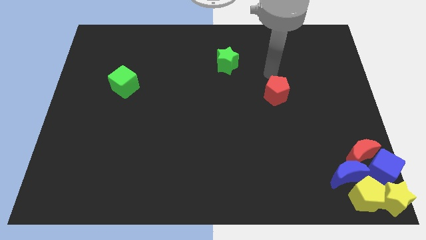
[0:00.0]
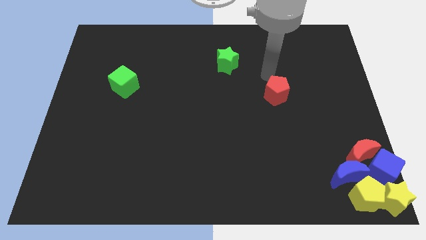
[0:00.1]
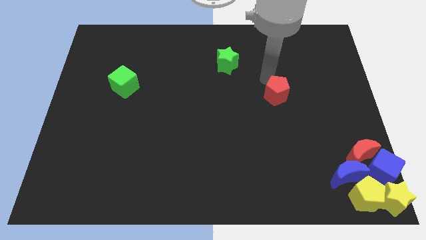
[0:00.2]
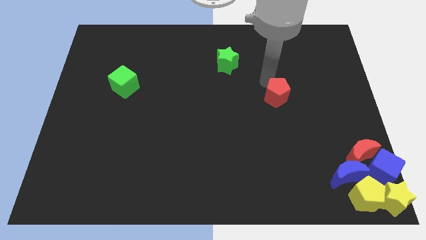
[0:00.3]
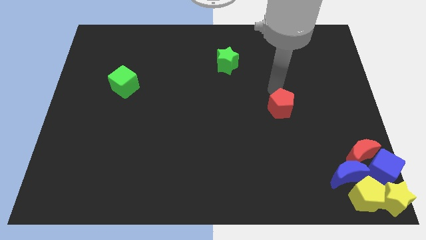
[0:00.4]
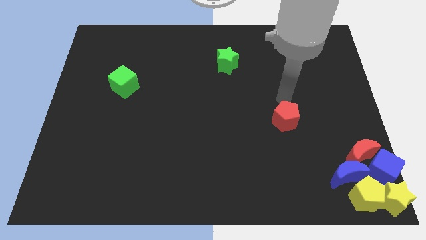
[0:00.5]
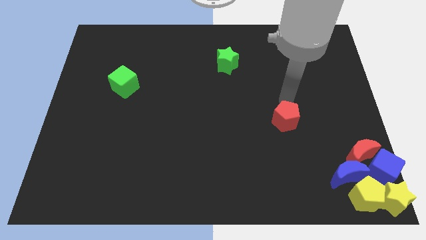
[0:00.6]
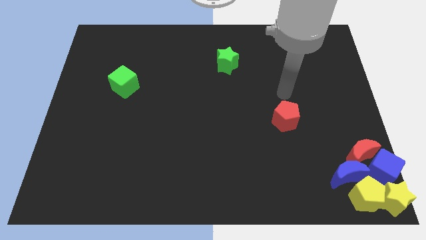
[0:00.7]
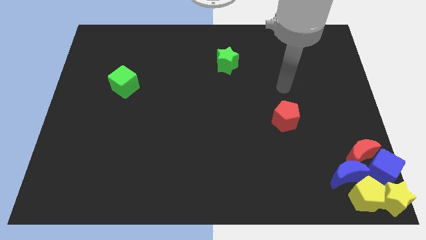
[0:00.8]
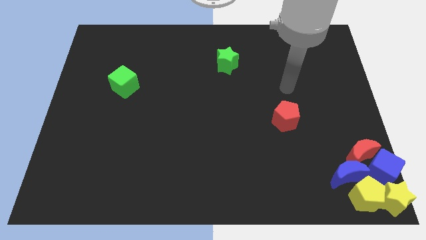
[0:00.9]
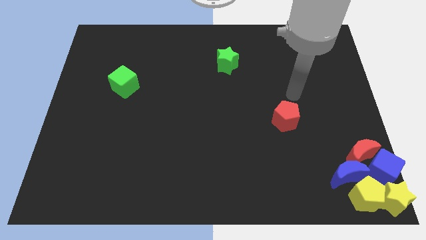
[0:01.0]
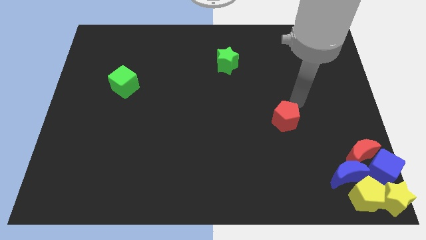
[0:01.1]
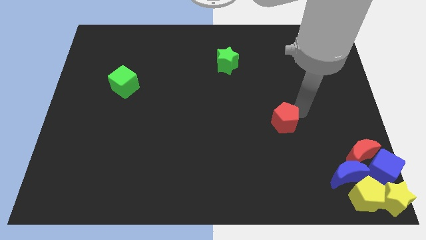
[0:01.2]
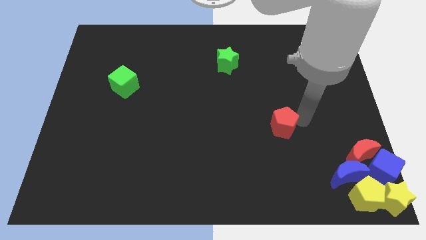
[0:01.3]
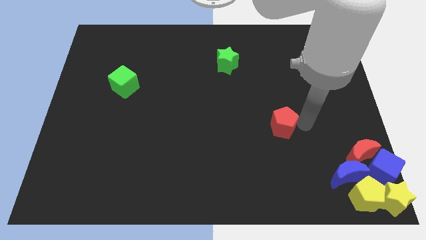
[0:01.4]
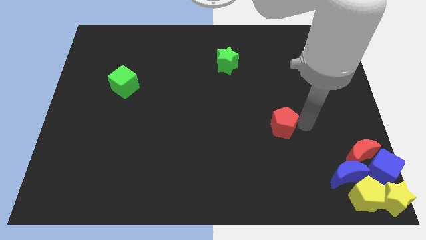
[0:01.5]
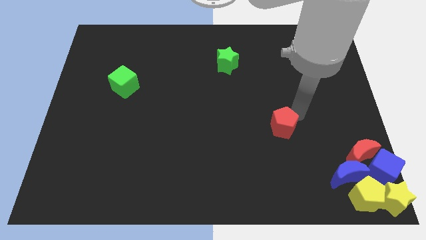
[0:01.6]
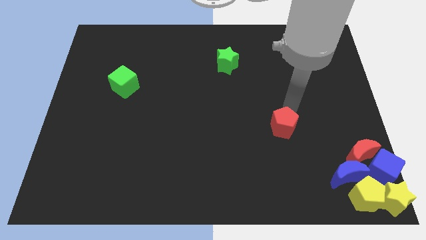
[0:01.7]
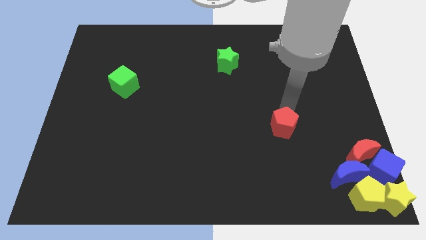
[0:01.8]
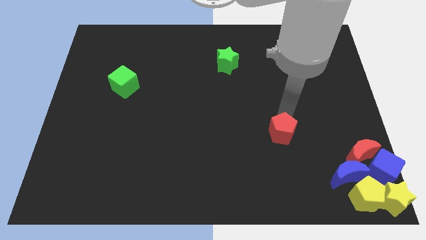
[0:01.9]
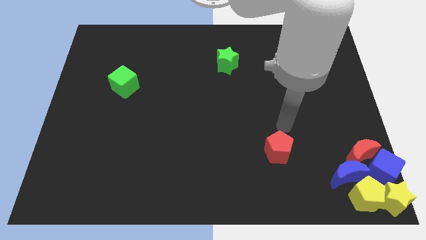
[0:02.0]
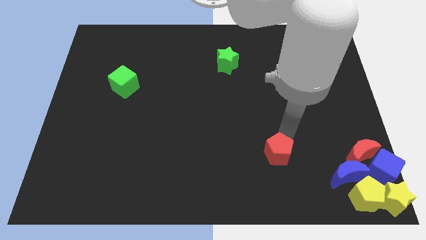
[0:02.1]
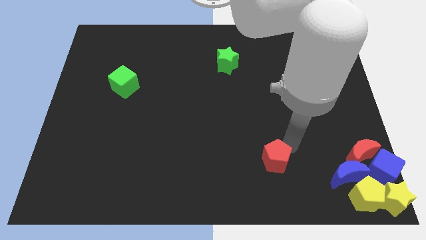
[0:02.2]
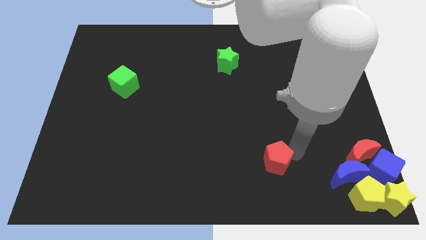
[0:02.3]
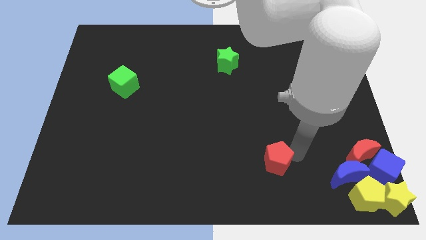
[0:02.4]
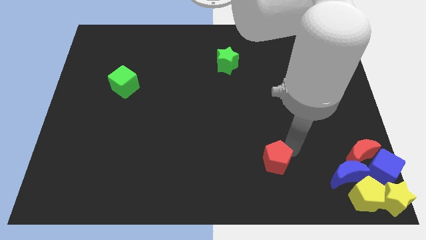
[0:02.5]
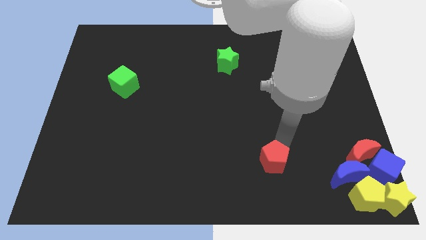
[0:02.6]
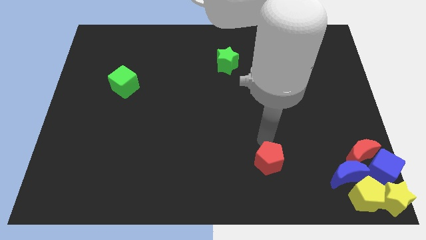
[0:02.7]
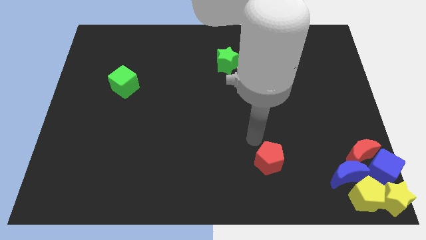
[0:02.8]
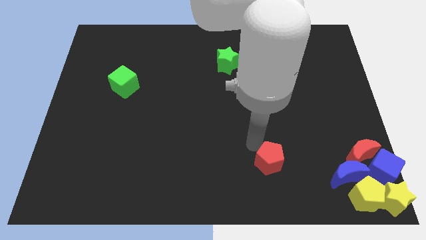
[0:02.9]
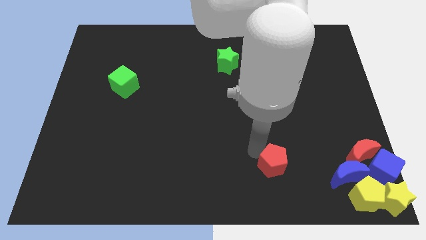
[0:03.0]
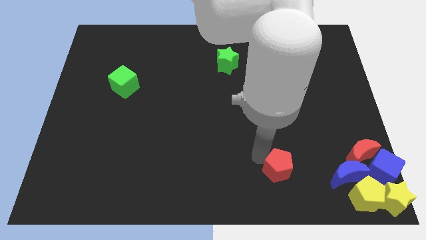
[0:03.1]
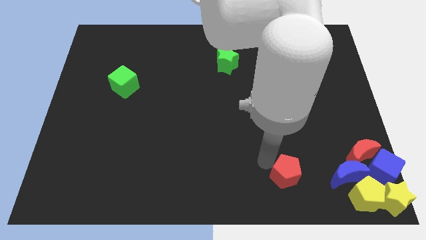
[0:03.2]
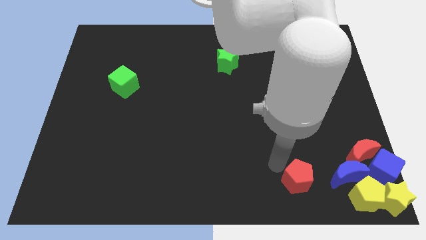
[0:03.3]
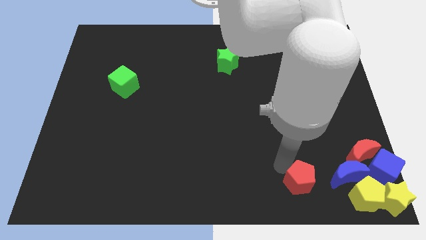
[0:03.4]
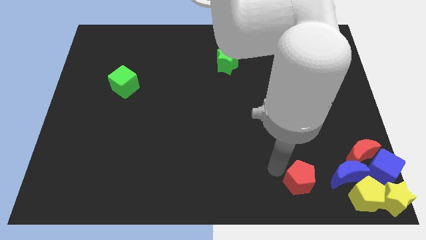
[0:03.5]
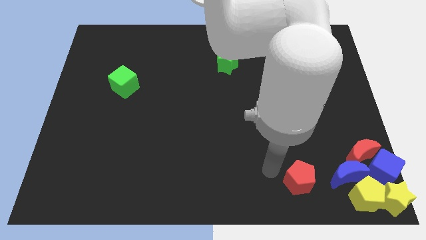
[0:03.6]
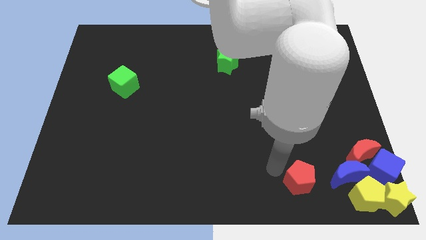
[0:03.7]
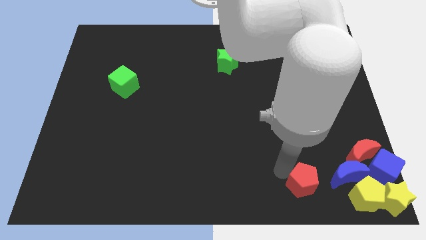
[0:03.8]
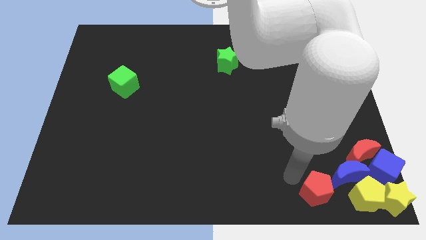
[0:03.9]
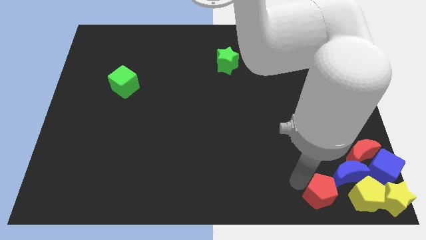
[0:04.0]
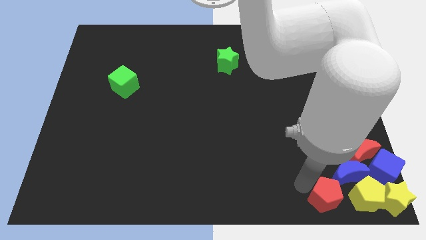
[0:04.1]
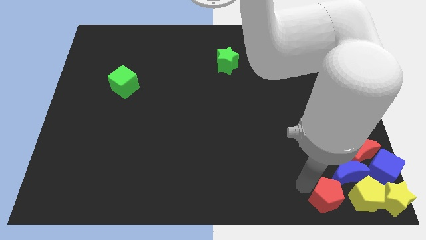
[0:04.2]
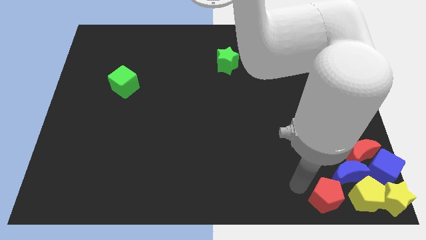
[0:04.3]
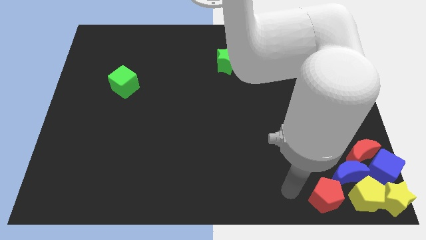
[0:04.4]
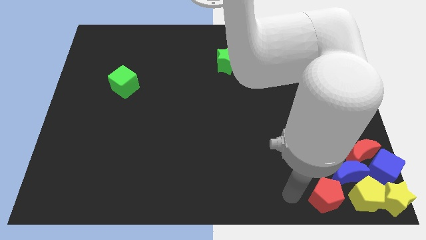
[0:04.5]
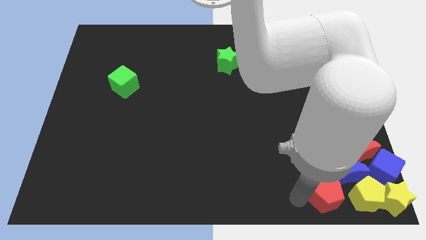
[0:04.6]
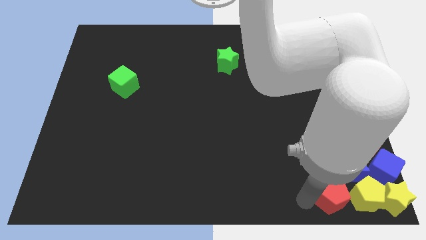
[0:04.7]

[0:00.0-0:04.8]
move the red pentagon left to the yellow pentagon

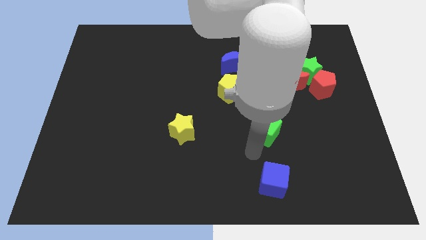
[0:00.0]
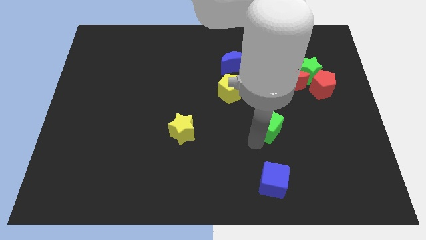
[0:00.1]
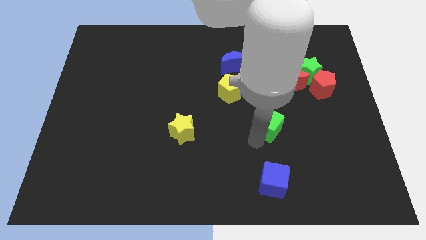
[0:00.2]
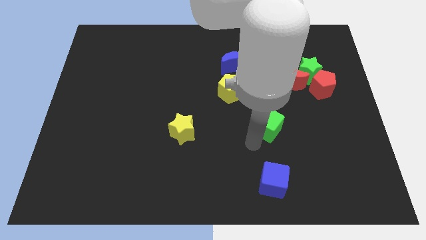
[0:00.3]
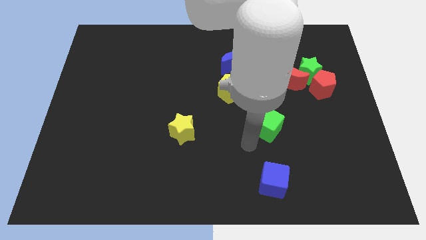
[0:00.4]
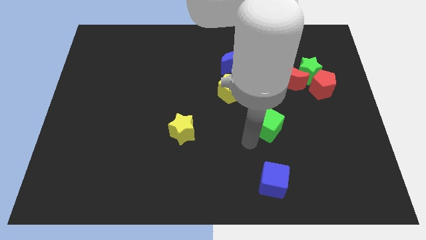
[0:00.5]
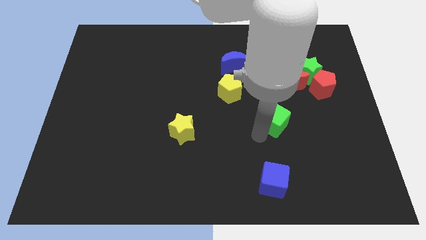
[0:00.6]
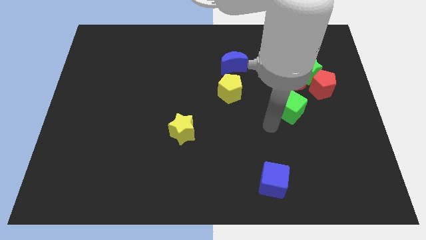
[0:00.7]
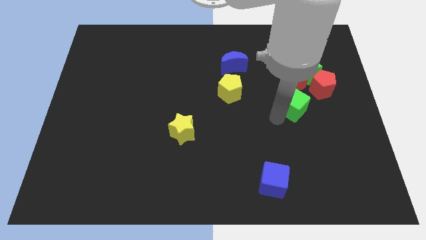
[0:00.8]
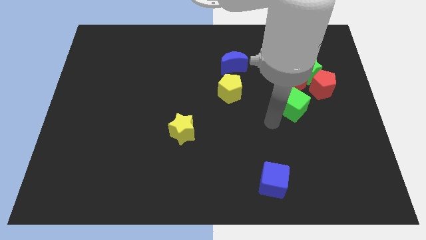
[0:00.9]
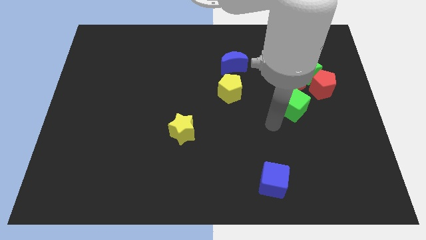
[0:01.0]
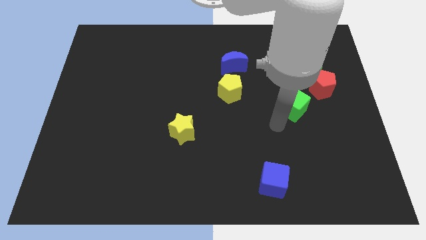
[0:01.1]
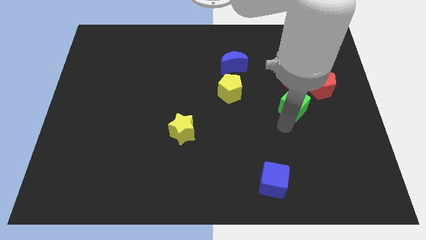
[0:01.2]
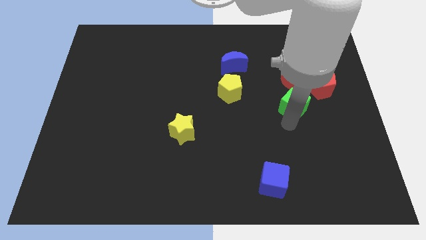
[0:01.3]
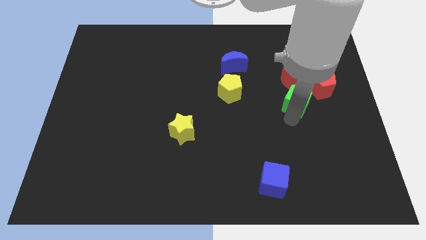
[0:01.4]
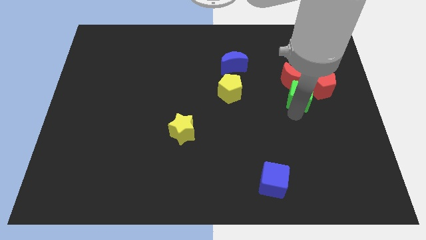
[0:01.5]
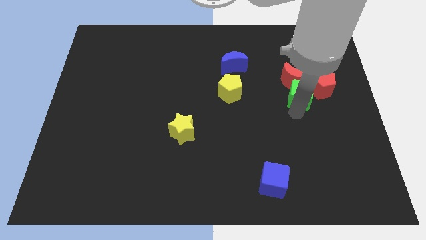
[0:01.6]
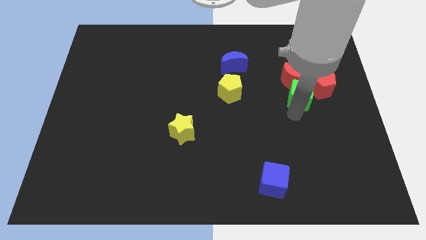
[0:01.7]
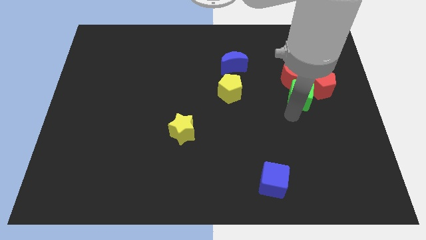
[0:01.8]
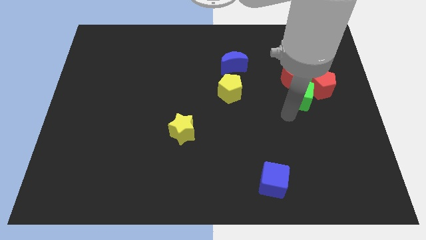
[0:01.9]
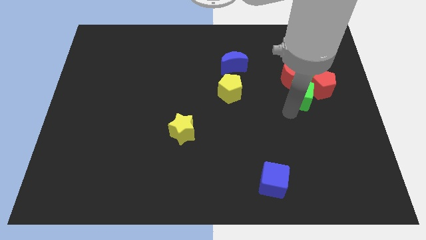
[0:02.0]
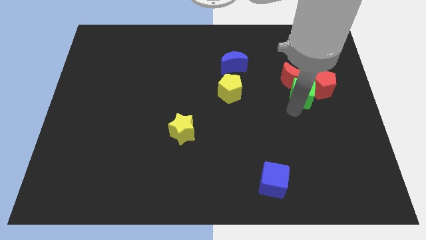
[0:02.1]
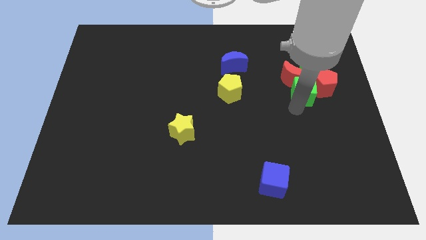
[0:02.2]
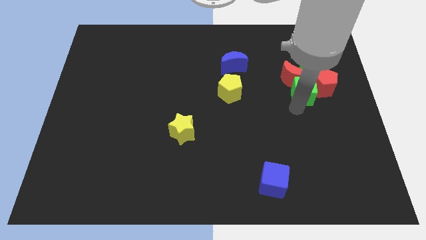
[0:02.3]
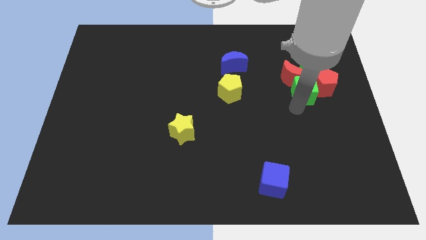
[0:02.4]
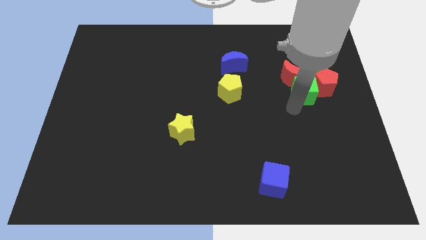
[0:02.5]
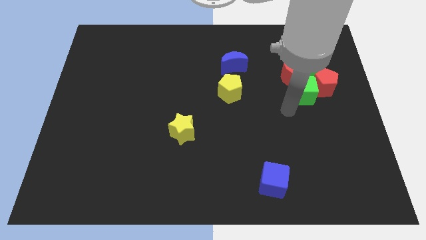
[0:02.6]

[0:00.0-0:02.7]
push green cube into the group of blocks

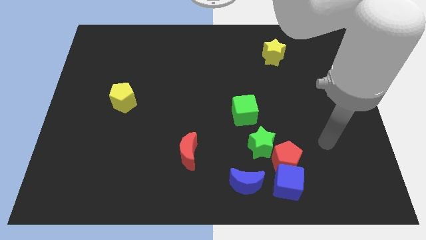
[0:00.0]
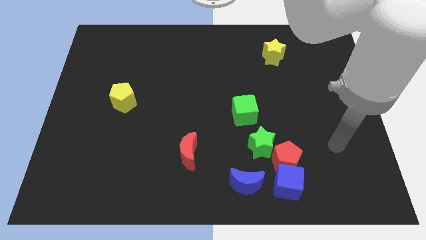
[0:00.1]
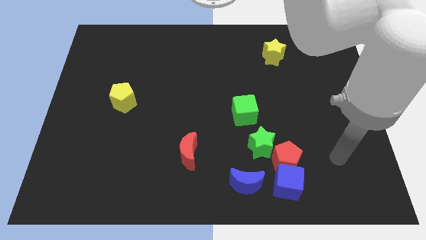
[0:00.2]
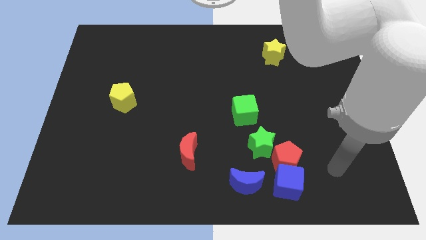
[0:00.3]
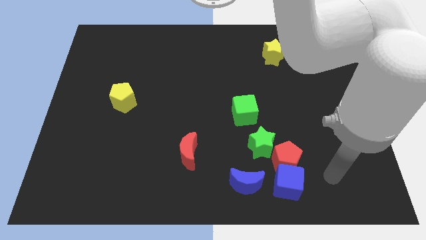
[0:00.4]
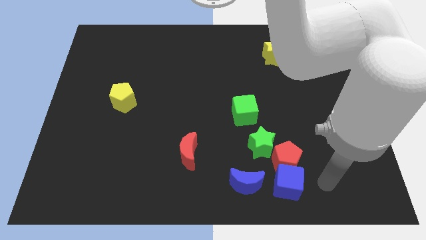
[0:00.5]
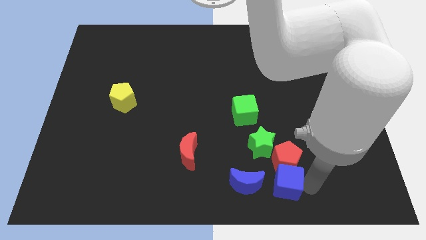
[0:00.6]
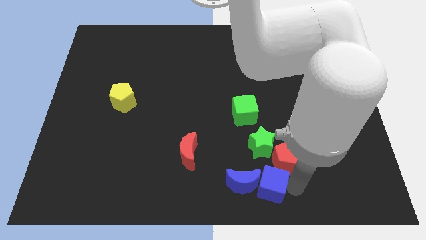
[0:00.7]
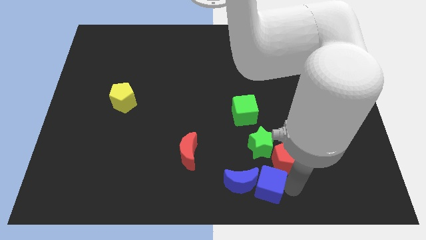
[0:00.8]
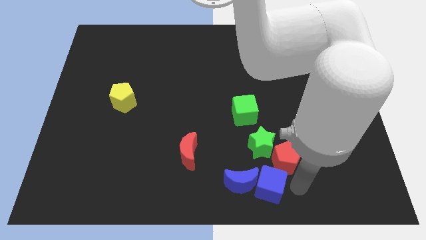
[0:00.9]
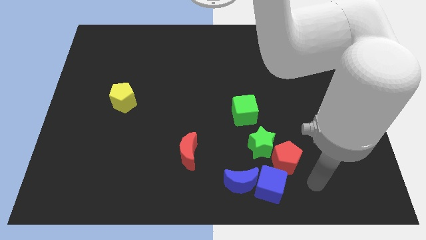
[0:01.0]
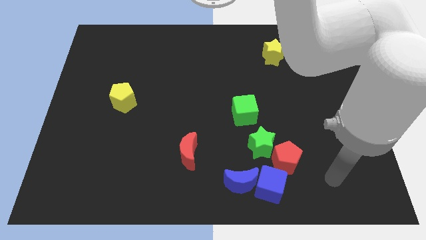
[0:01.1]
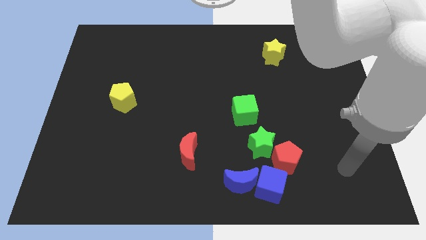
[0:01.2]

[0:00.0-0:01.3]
move the blue cube to the right side of the blue crescent
